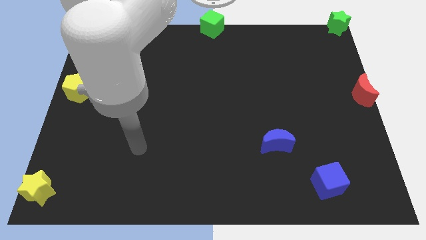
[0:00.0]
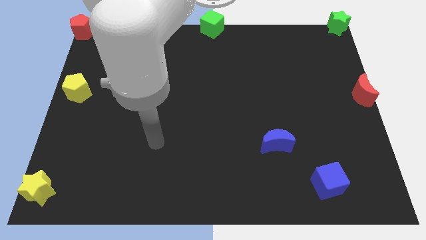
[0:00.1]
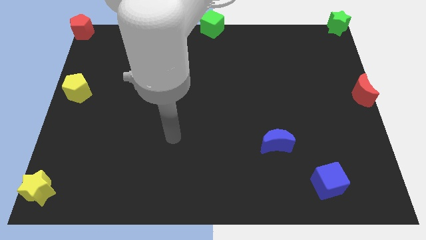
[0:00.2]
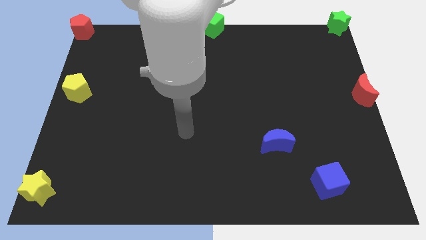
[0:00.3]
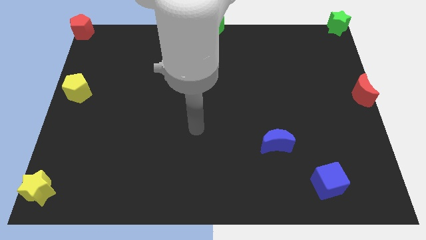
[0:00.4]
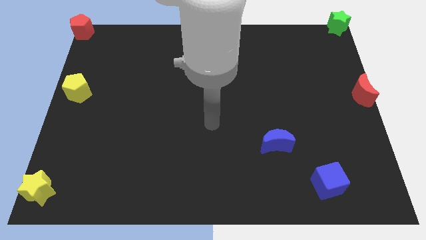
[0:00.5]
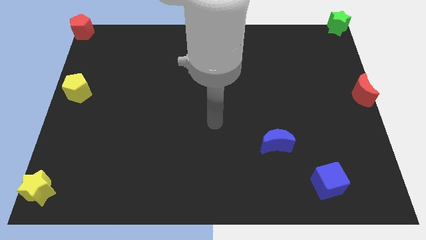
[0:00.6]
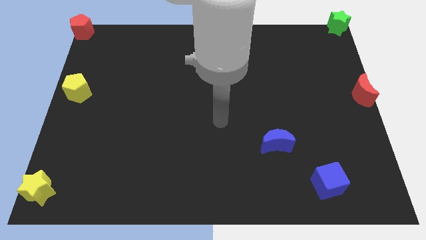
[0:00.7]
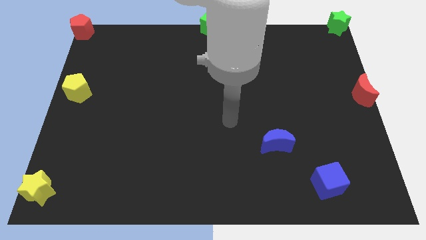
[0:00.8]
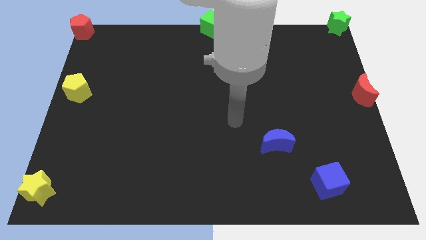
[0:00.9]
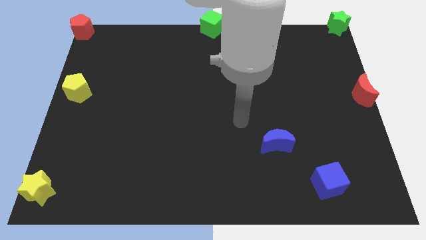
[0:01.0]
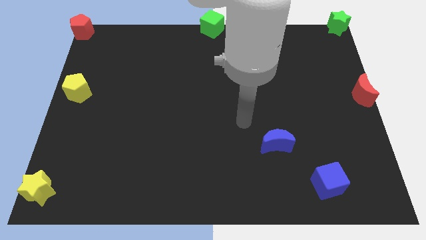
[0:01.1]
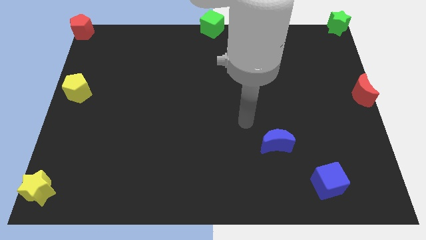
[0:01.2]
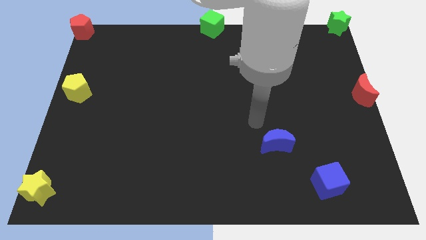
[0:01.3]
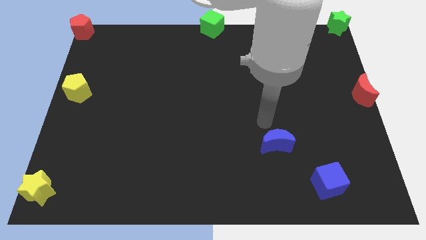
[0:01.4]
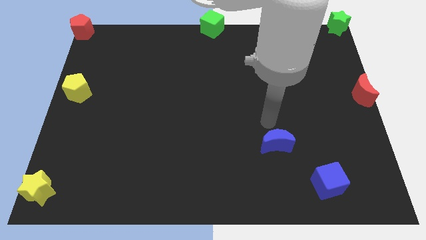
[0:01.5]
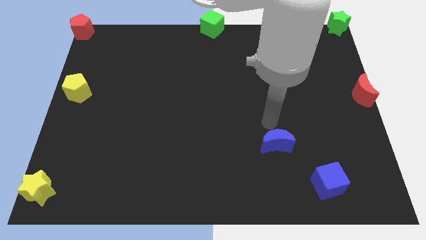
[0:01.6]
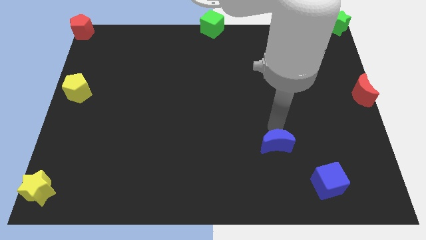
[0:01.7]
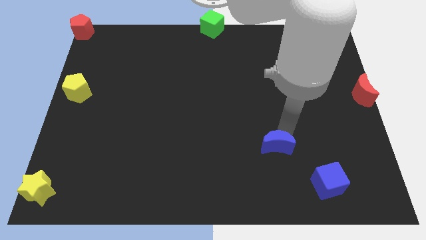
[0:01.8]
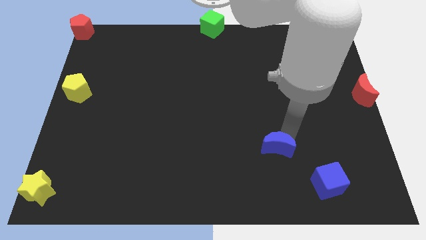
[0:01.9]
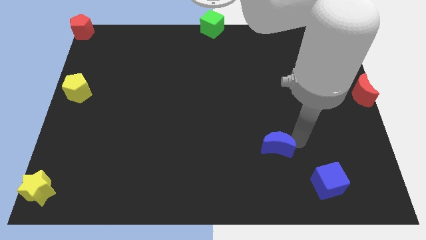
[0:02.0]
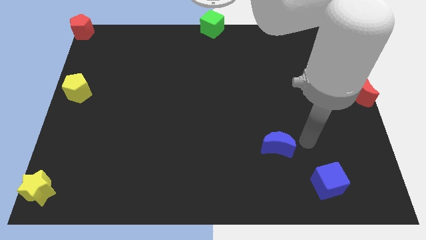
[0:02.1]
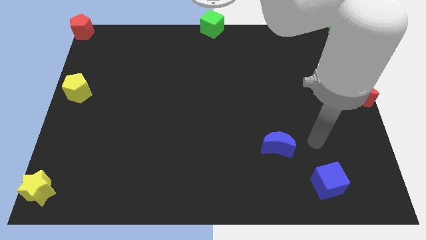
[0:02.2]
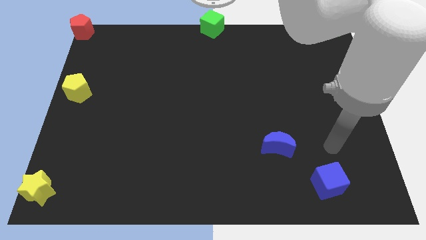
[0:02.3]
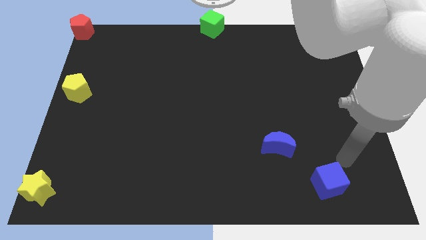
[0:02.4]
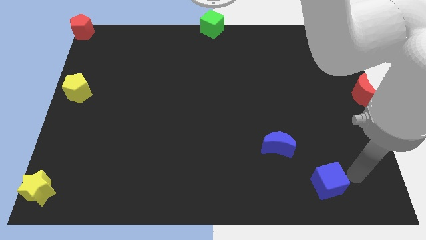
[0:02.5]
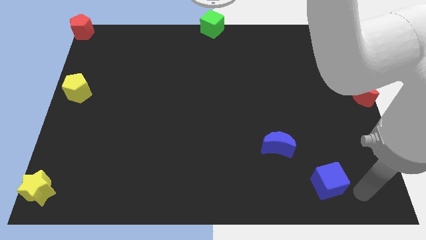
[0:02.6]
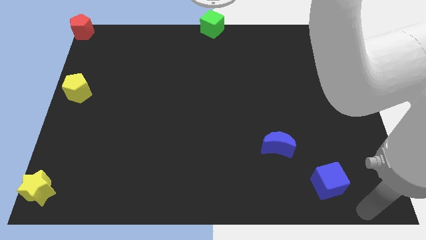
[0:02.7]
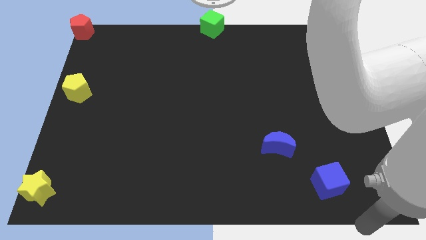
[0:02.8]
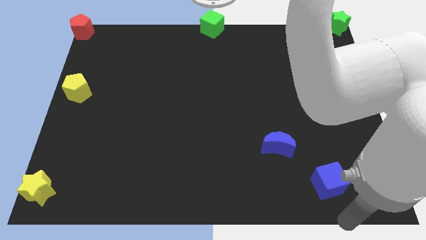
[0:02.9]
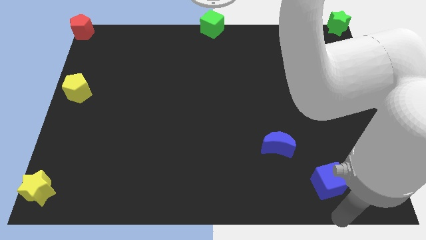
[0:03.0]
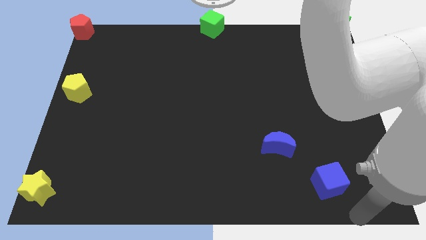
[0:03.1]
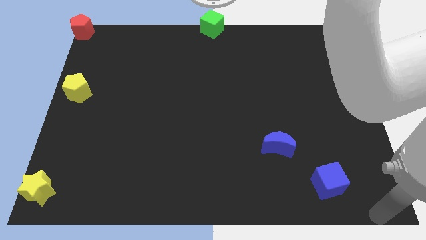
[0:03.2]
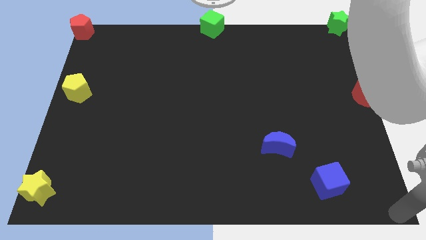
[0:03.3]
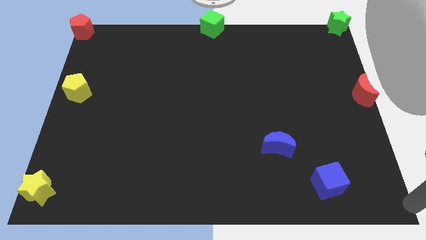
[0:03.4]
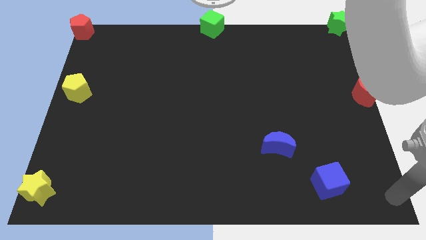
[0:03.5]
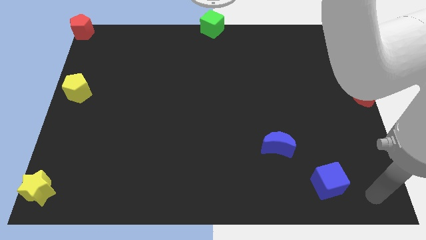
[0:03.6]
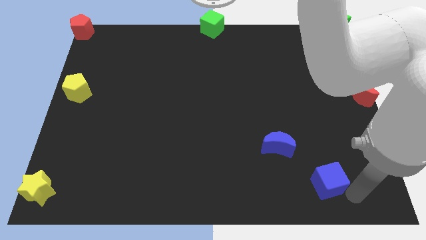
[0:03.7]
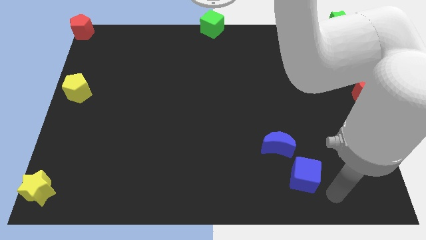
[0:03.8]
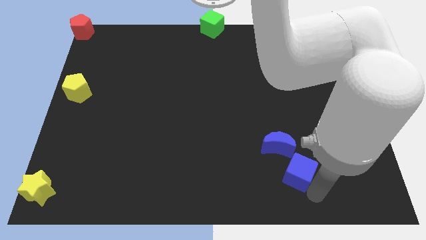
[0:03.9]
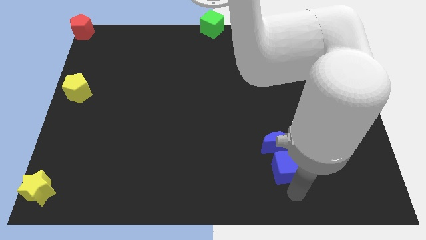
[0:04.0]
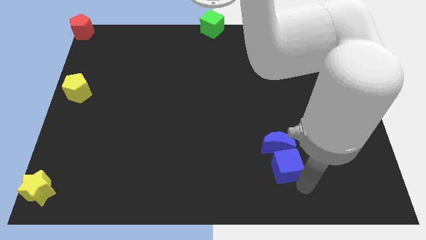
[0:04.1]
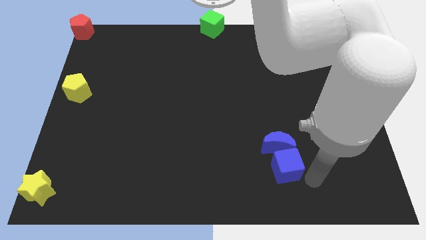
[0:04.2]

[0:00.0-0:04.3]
push the blue cube close to the blue moon

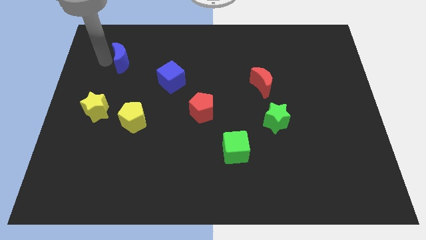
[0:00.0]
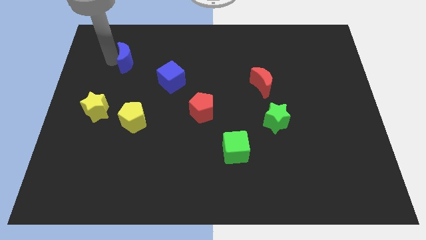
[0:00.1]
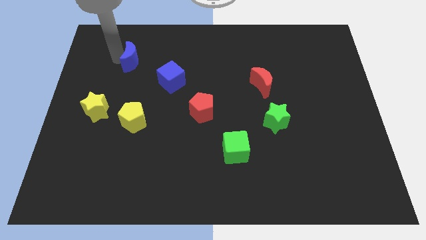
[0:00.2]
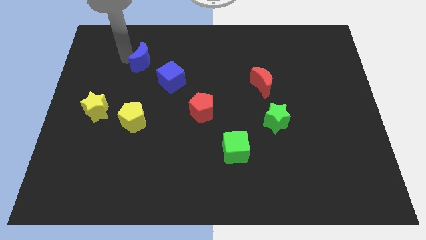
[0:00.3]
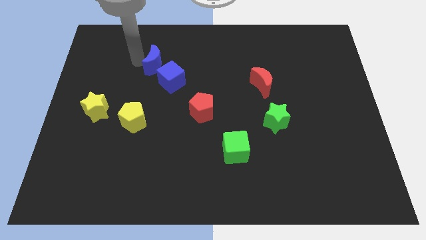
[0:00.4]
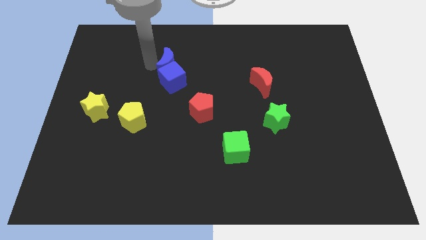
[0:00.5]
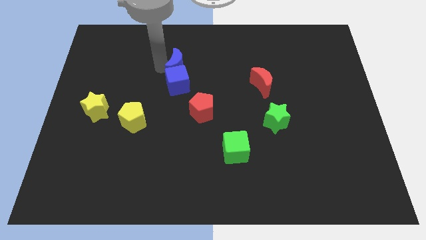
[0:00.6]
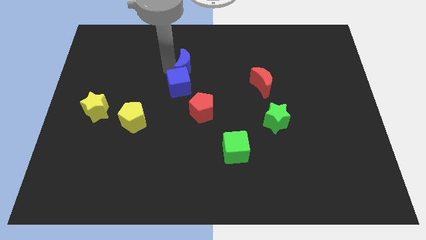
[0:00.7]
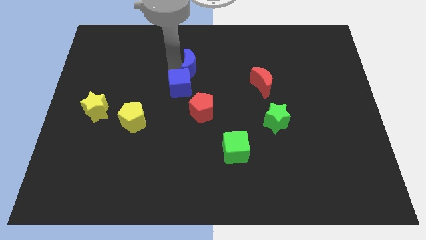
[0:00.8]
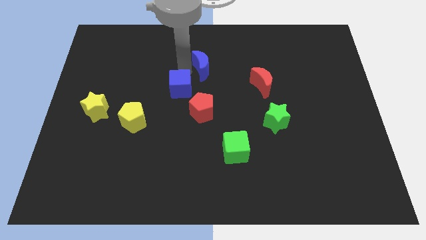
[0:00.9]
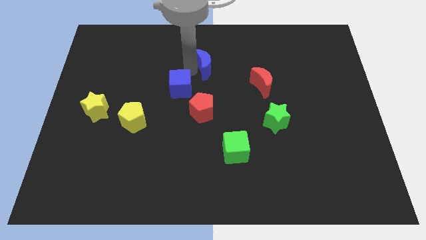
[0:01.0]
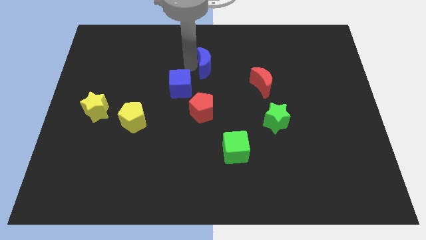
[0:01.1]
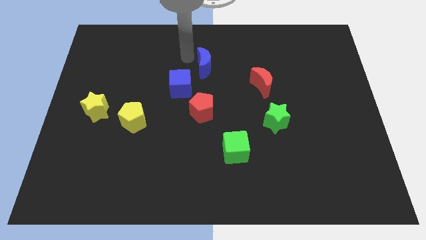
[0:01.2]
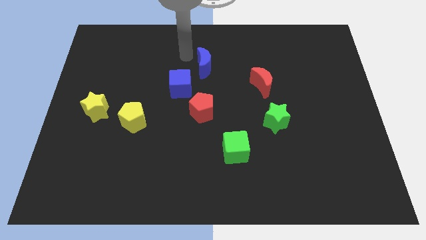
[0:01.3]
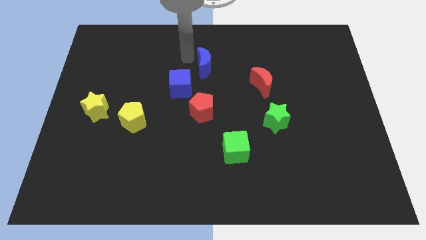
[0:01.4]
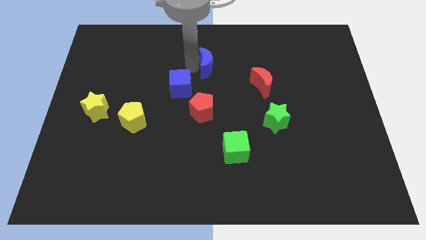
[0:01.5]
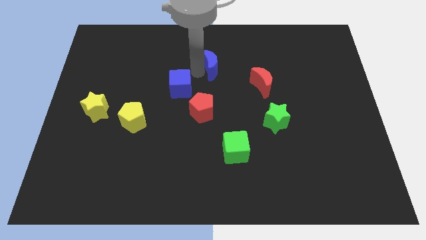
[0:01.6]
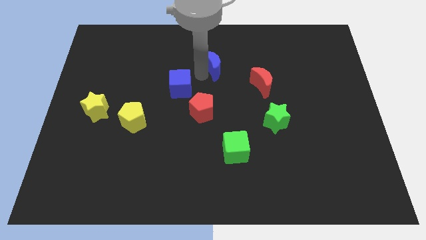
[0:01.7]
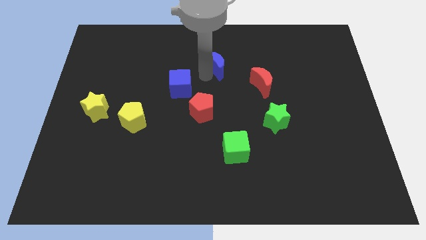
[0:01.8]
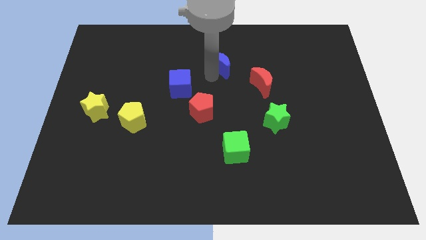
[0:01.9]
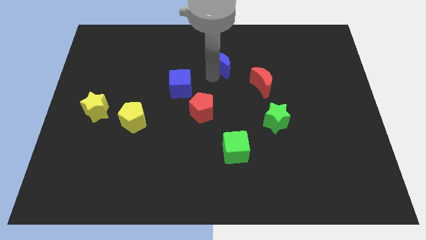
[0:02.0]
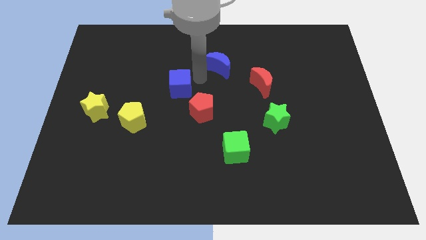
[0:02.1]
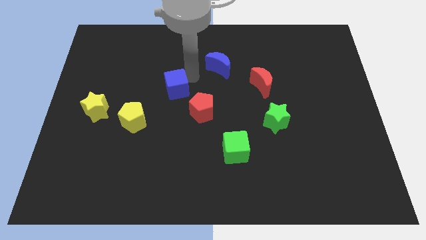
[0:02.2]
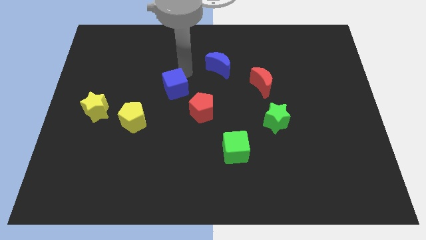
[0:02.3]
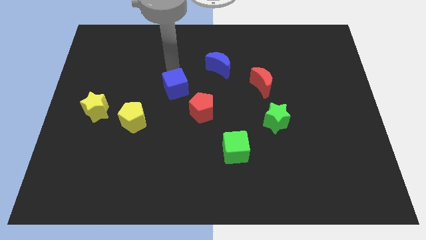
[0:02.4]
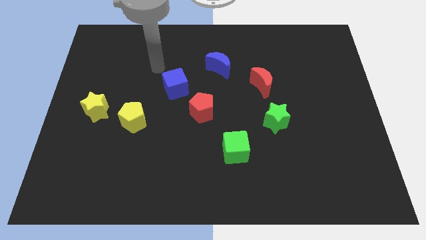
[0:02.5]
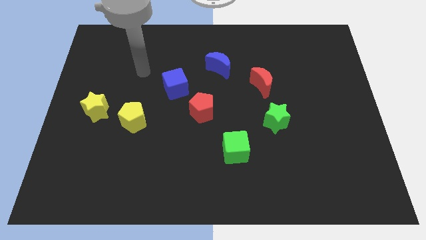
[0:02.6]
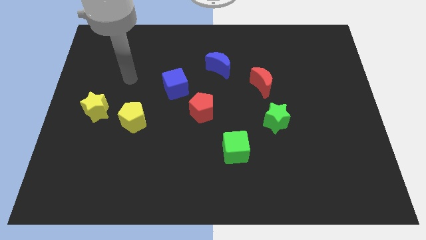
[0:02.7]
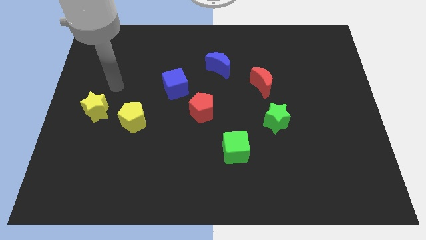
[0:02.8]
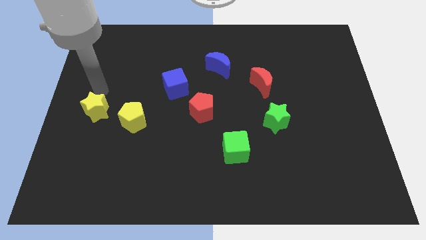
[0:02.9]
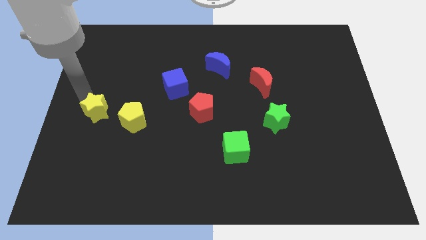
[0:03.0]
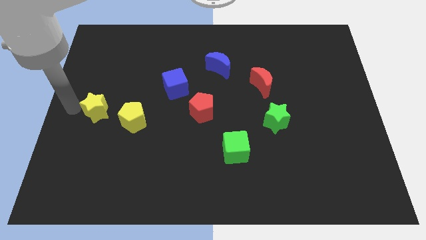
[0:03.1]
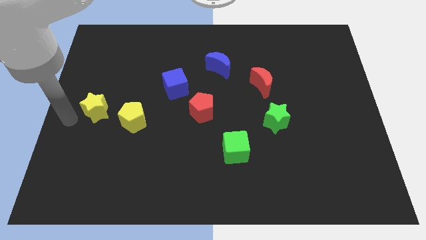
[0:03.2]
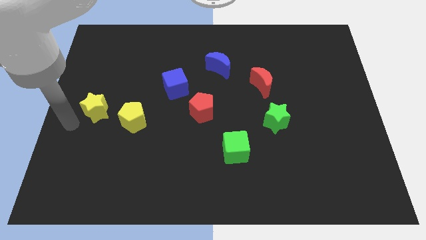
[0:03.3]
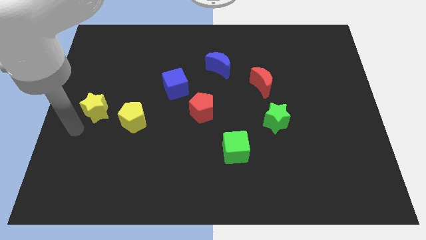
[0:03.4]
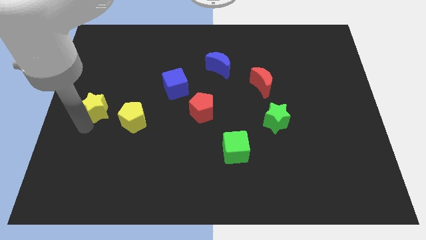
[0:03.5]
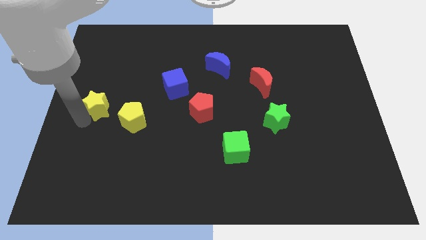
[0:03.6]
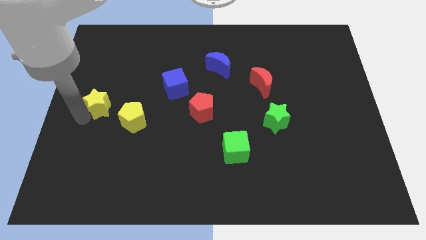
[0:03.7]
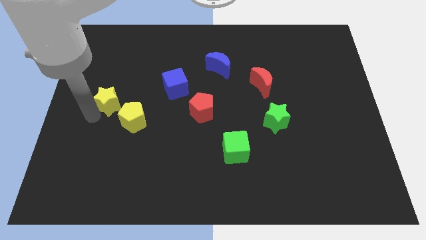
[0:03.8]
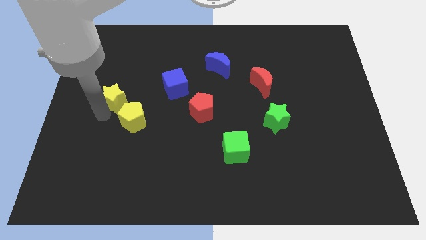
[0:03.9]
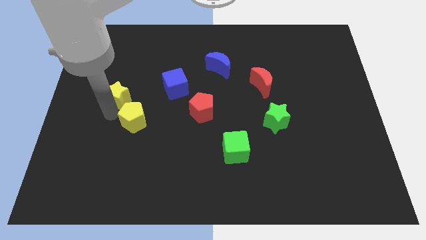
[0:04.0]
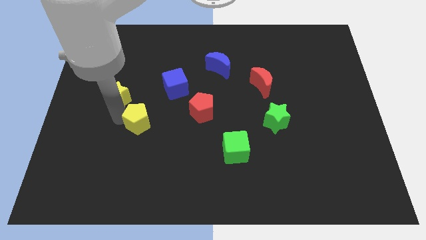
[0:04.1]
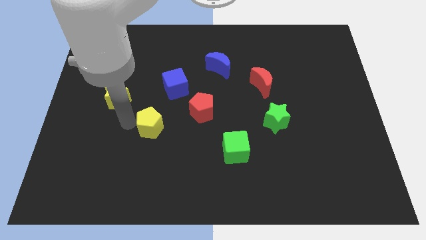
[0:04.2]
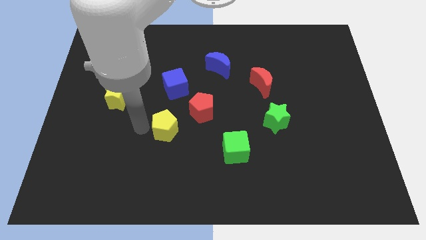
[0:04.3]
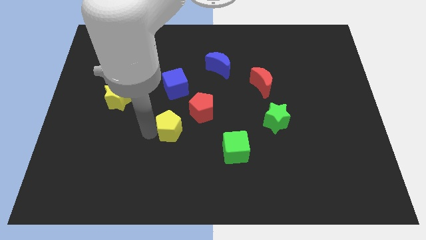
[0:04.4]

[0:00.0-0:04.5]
slide the yellow pentagon towards the red pentagon
